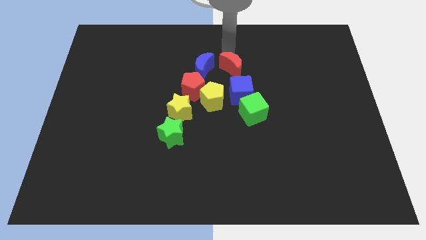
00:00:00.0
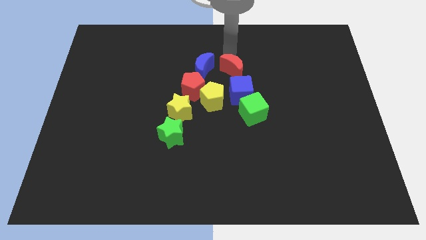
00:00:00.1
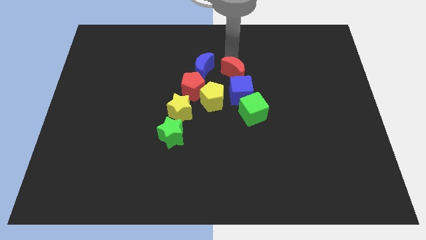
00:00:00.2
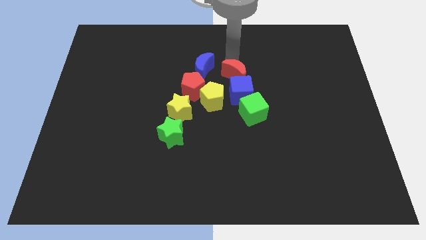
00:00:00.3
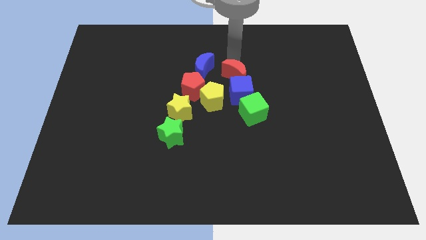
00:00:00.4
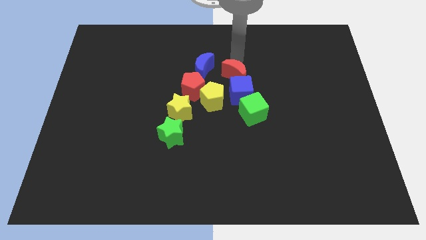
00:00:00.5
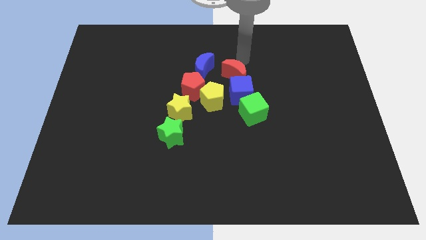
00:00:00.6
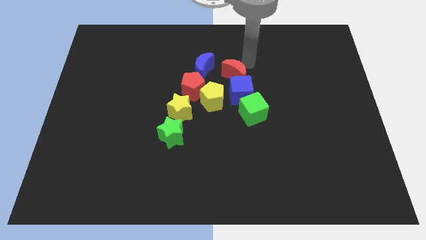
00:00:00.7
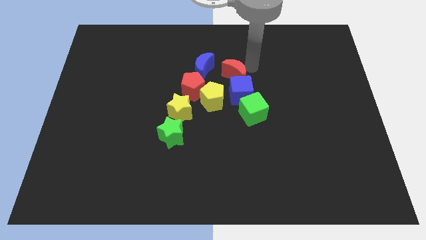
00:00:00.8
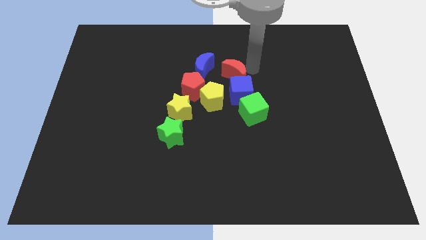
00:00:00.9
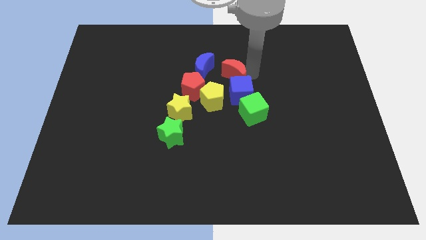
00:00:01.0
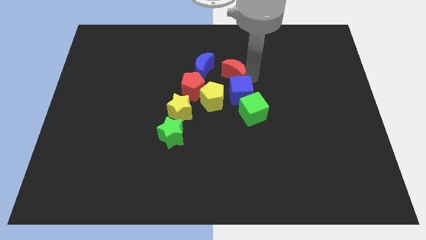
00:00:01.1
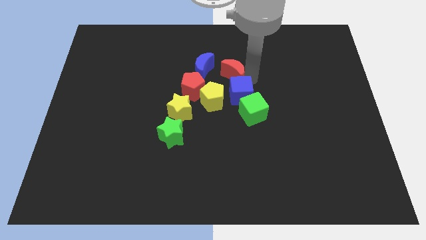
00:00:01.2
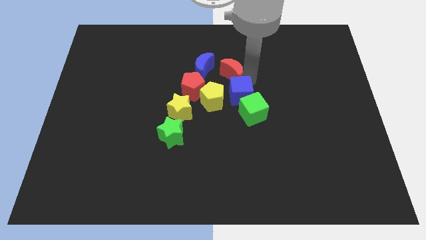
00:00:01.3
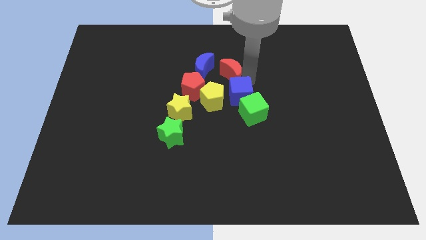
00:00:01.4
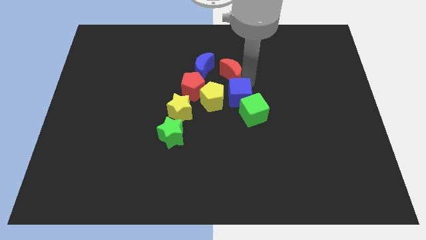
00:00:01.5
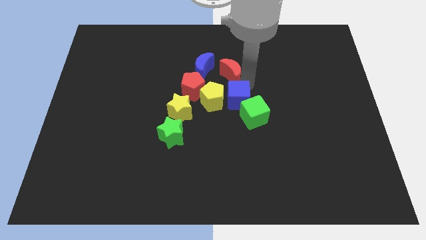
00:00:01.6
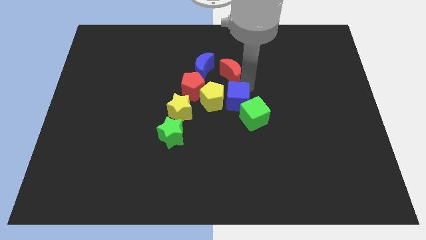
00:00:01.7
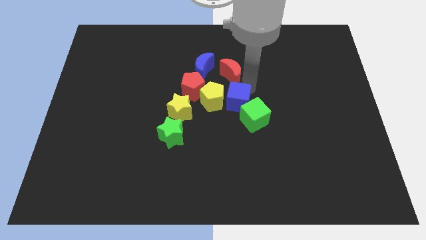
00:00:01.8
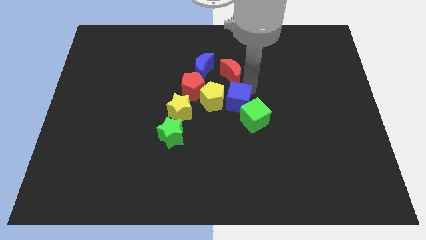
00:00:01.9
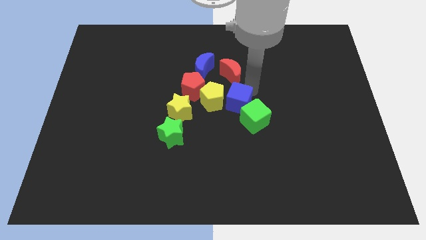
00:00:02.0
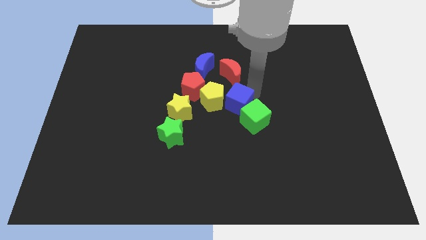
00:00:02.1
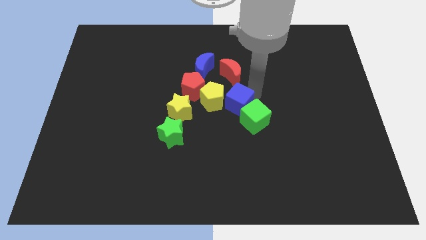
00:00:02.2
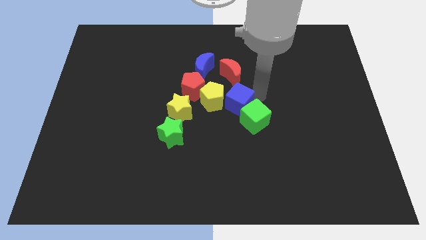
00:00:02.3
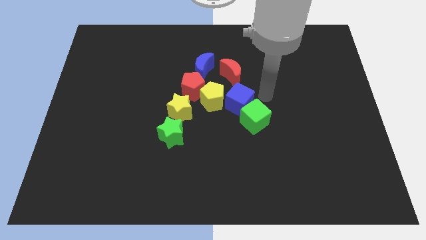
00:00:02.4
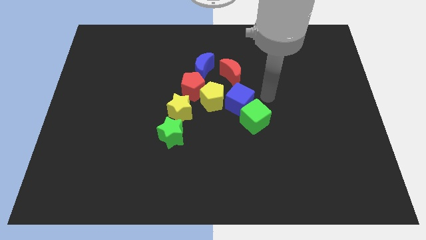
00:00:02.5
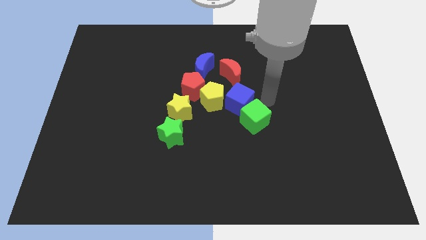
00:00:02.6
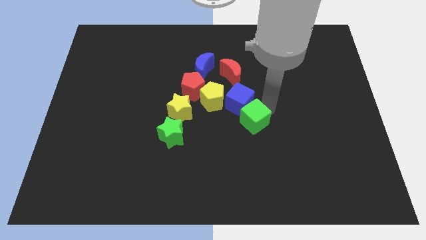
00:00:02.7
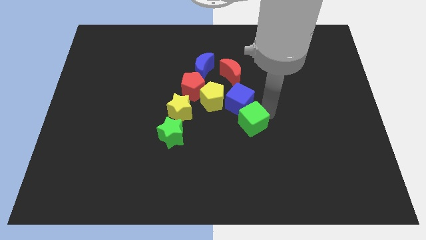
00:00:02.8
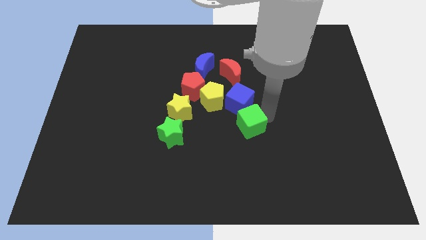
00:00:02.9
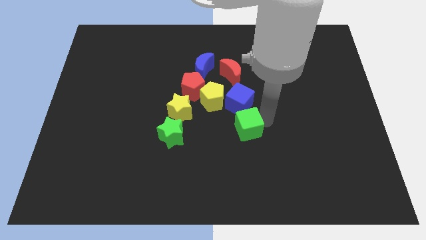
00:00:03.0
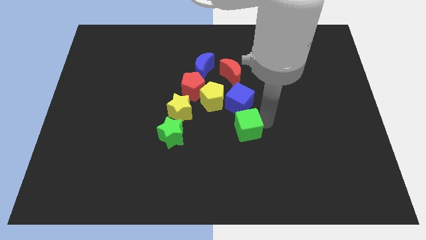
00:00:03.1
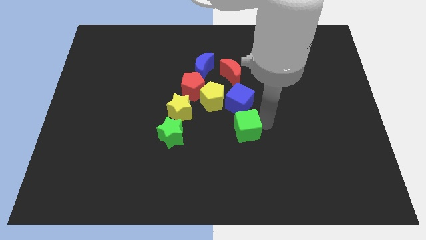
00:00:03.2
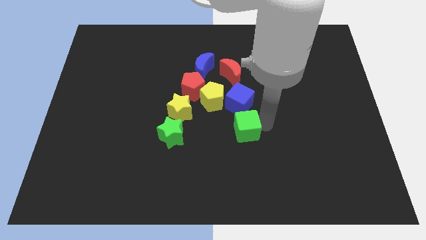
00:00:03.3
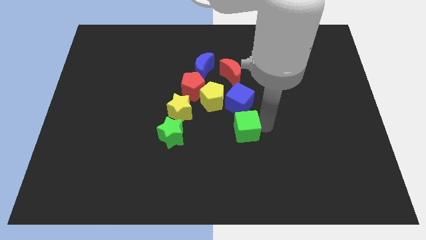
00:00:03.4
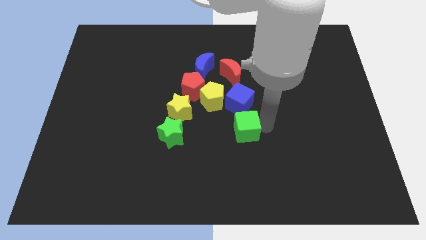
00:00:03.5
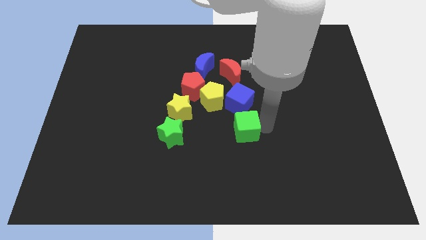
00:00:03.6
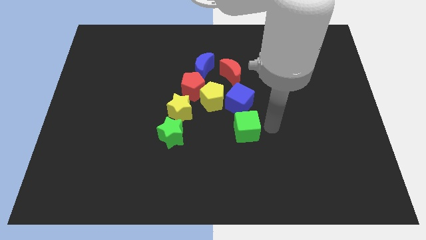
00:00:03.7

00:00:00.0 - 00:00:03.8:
adjust the red moon blue cube and green cube at the right side of the other blocks

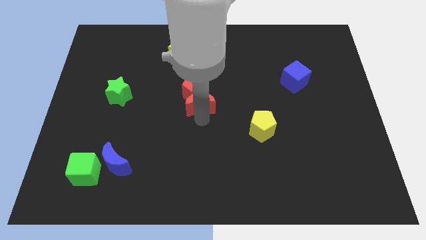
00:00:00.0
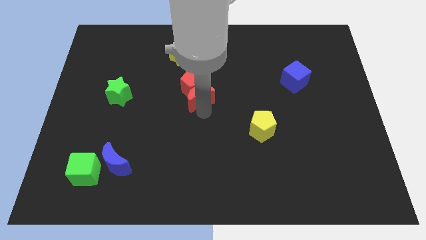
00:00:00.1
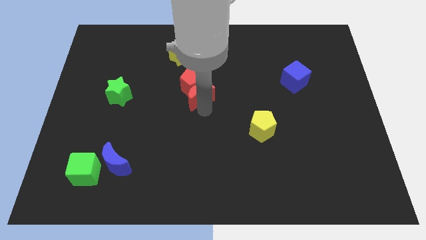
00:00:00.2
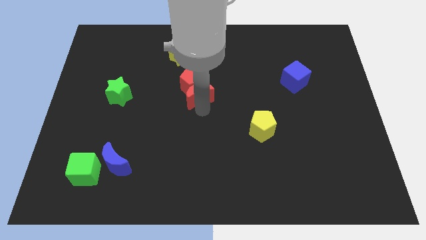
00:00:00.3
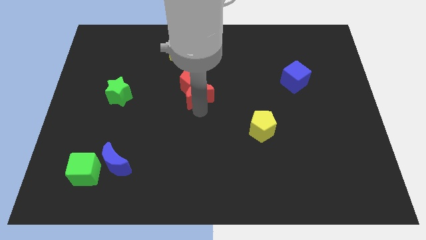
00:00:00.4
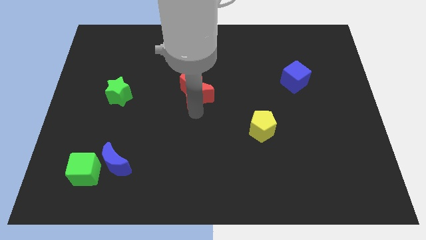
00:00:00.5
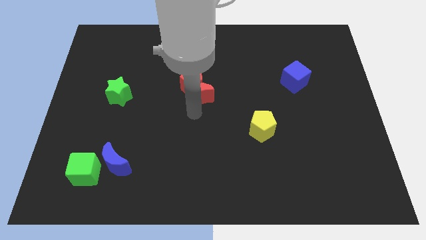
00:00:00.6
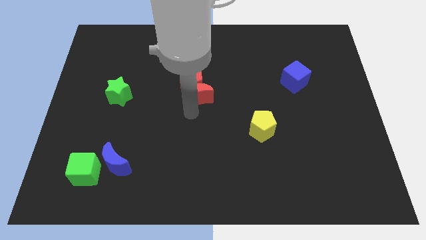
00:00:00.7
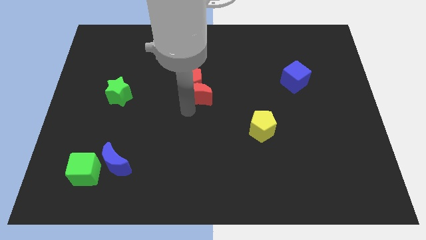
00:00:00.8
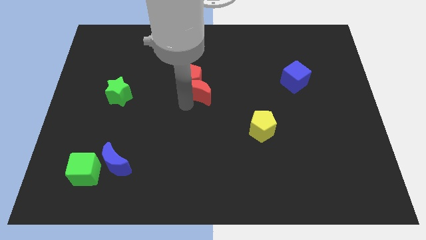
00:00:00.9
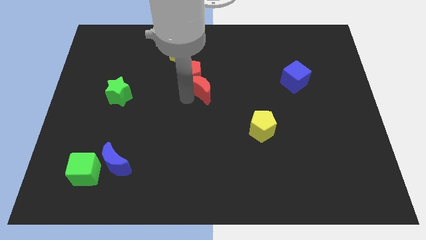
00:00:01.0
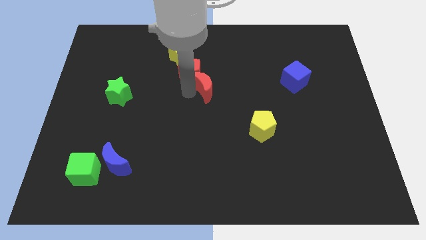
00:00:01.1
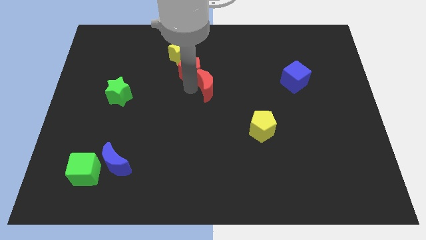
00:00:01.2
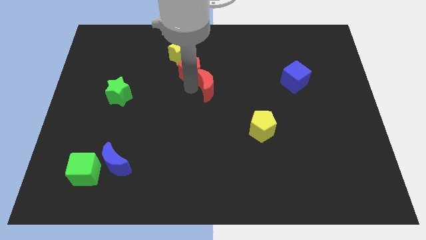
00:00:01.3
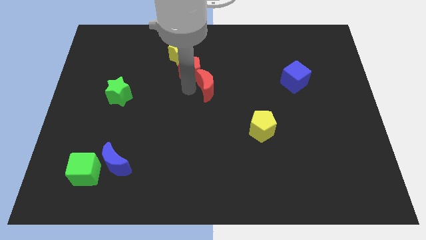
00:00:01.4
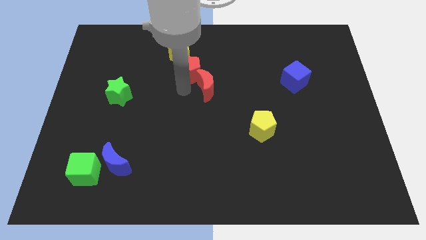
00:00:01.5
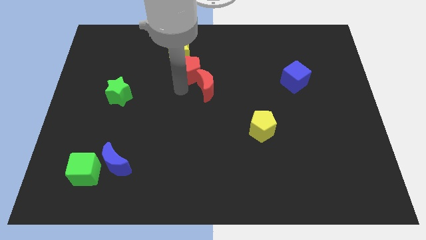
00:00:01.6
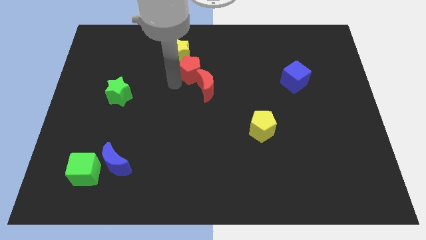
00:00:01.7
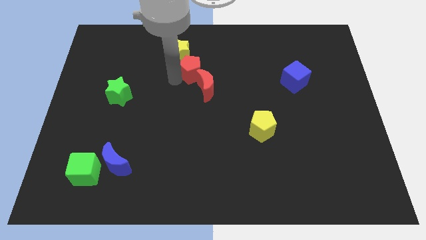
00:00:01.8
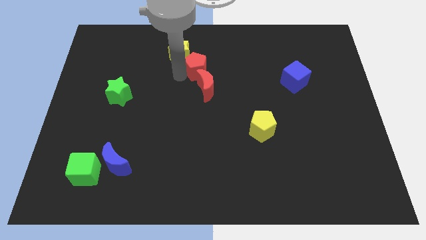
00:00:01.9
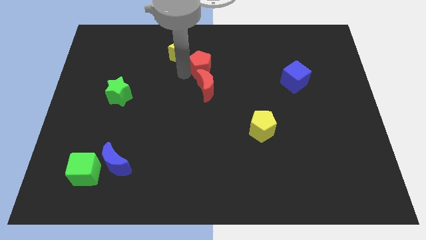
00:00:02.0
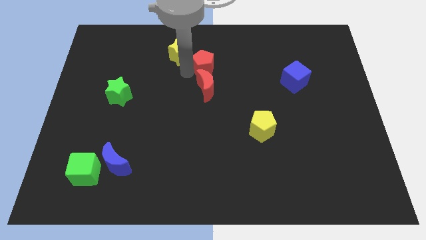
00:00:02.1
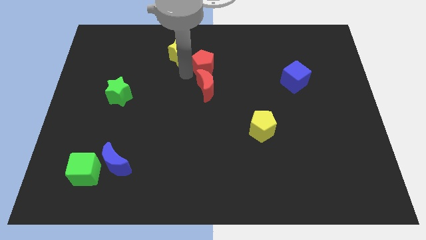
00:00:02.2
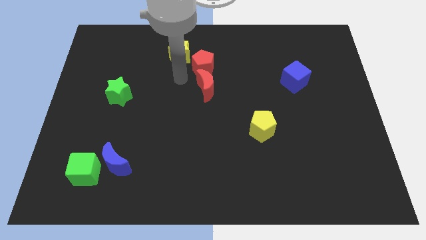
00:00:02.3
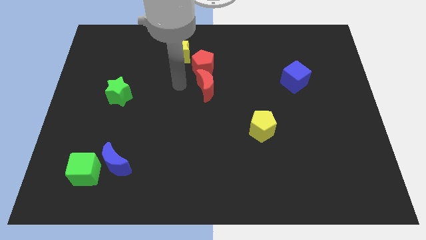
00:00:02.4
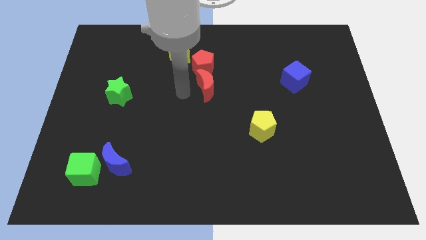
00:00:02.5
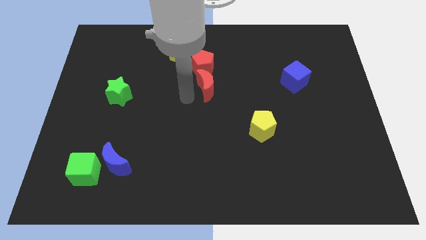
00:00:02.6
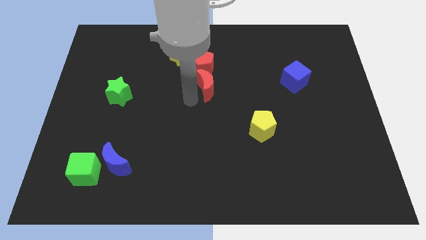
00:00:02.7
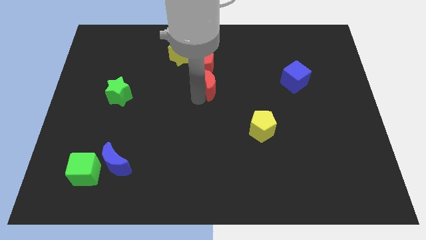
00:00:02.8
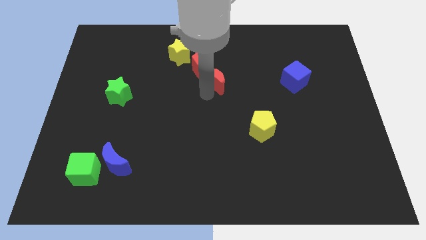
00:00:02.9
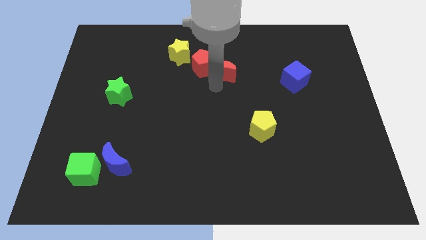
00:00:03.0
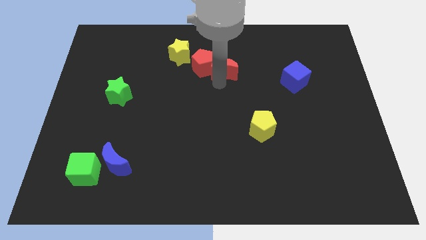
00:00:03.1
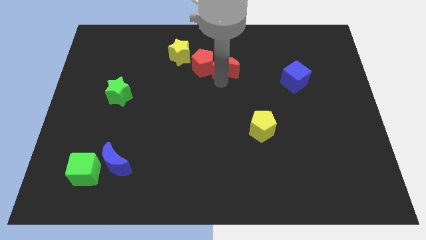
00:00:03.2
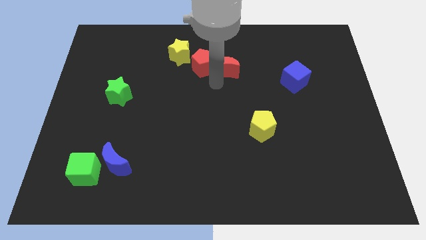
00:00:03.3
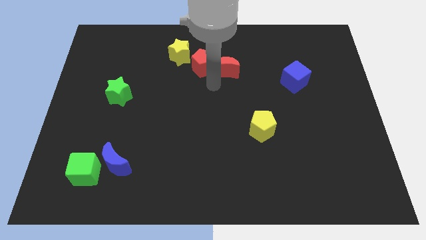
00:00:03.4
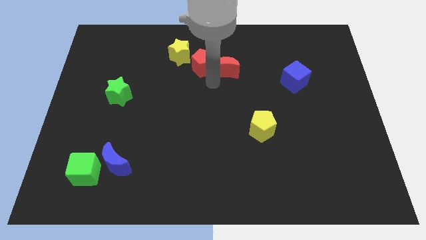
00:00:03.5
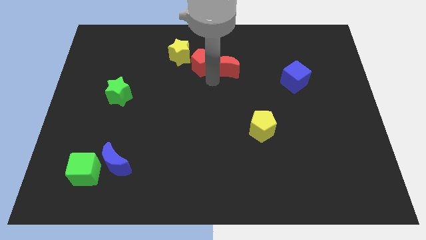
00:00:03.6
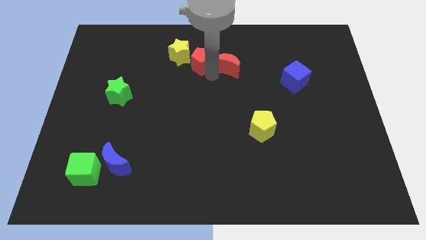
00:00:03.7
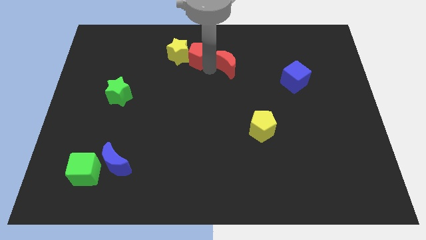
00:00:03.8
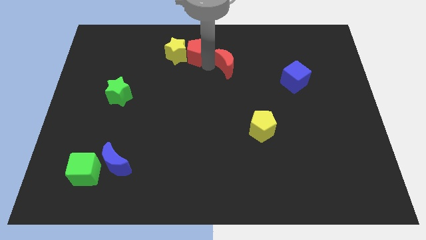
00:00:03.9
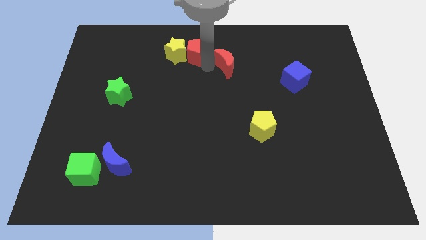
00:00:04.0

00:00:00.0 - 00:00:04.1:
place red blocks to right of yellow star

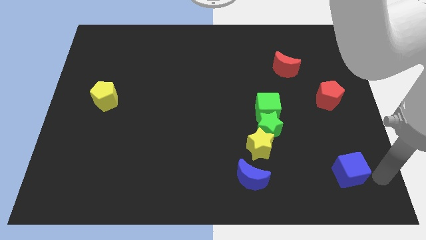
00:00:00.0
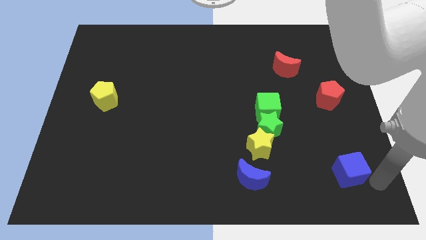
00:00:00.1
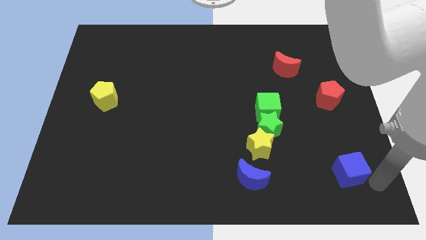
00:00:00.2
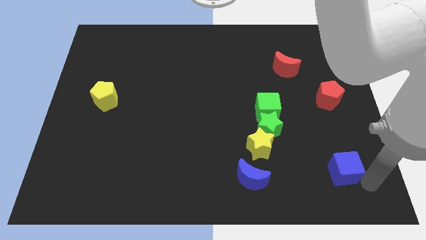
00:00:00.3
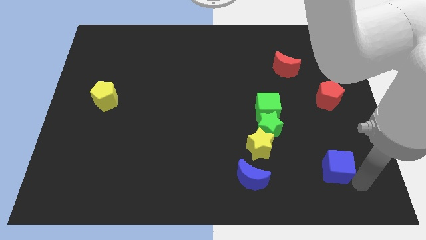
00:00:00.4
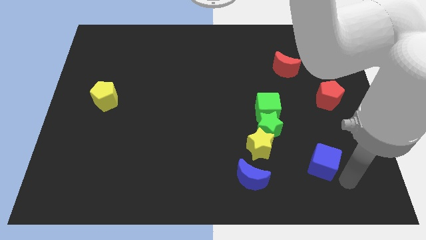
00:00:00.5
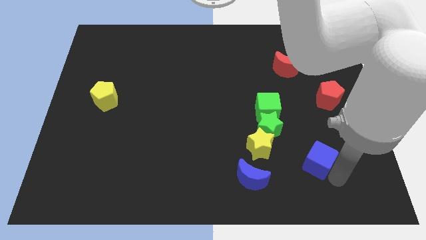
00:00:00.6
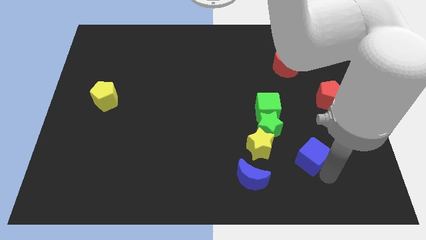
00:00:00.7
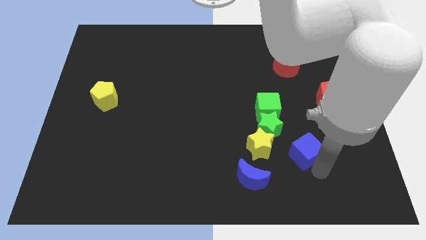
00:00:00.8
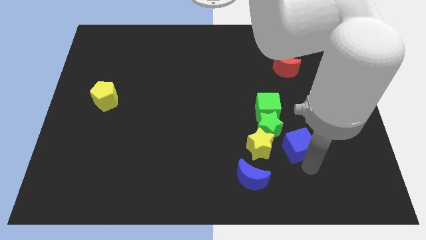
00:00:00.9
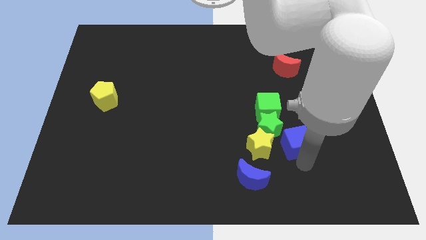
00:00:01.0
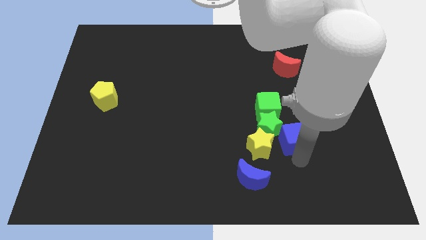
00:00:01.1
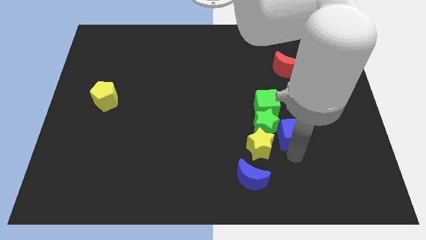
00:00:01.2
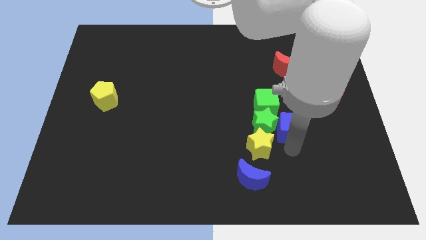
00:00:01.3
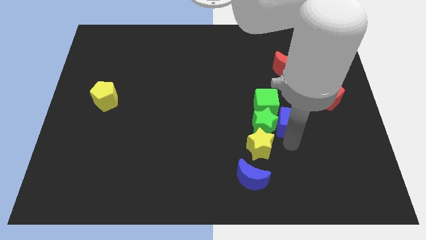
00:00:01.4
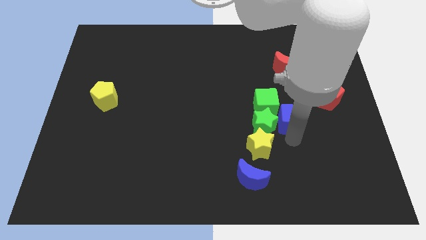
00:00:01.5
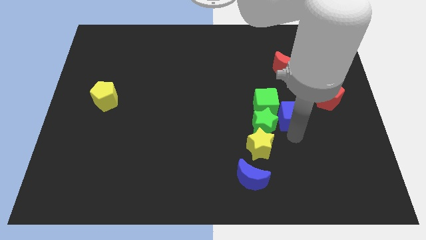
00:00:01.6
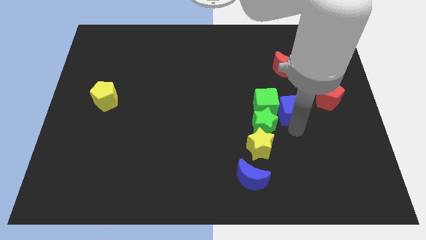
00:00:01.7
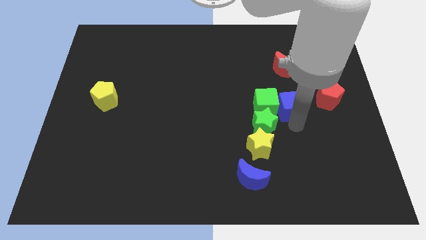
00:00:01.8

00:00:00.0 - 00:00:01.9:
place blue cube near green cube
